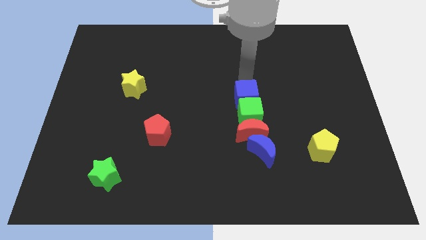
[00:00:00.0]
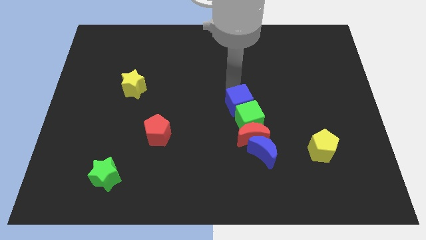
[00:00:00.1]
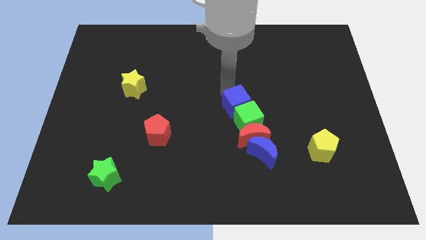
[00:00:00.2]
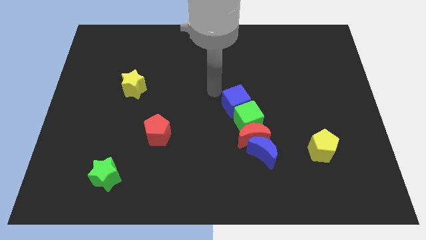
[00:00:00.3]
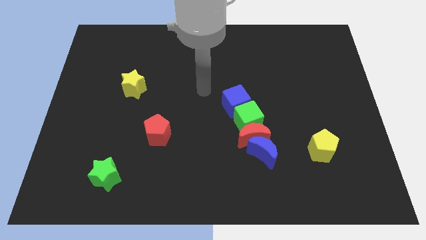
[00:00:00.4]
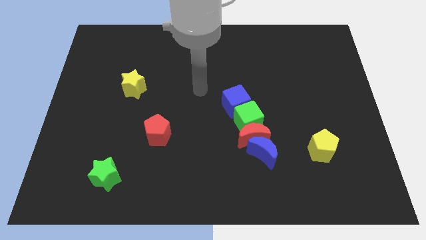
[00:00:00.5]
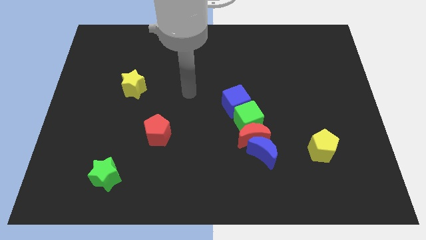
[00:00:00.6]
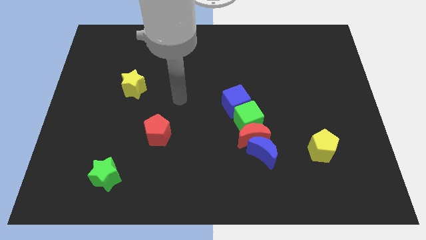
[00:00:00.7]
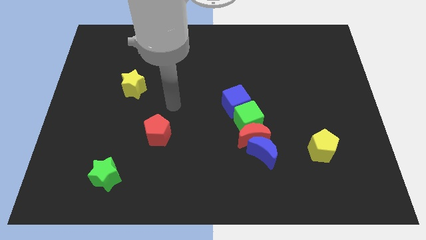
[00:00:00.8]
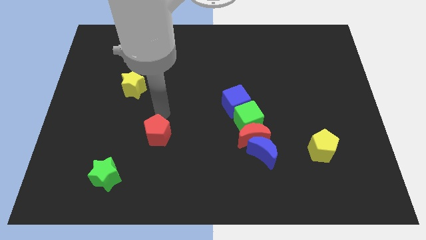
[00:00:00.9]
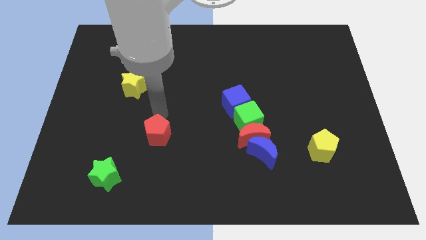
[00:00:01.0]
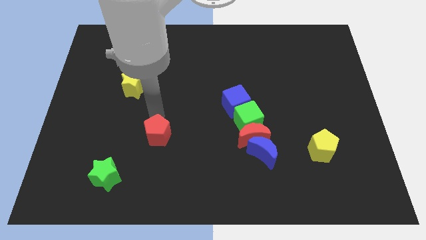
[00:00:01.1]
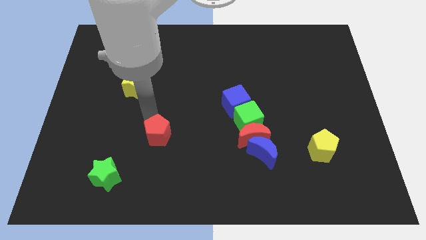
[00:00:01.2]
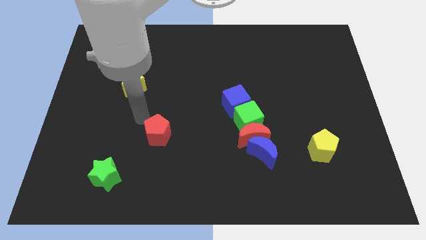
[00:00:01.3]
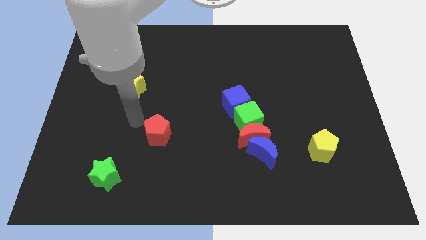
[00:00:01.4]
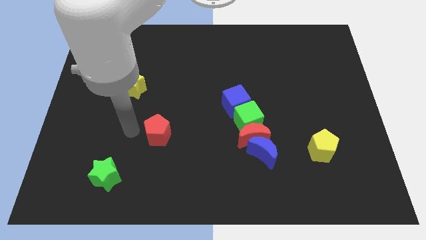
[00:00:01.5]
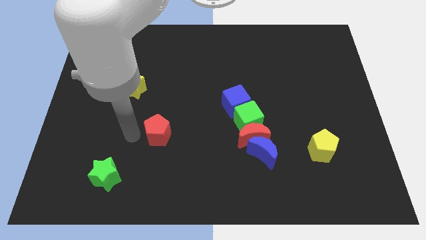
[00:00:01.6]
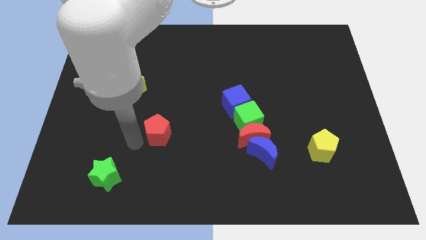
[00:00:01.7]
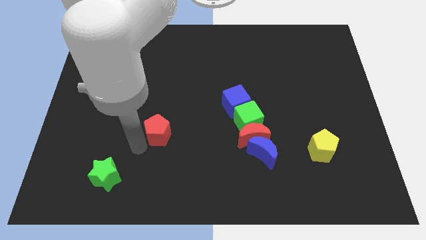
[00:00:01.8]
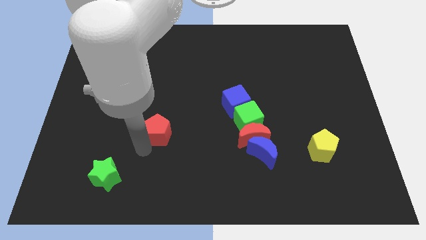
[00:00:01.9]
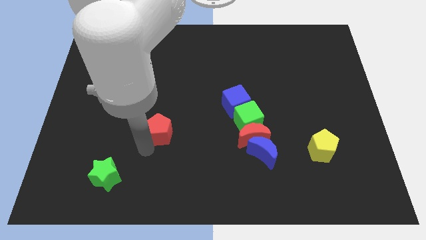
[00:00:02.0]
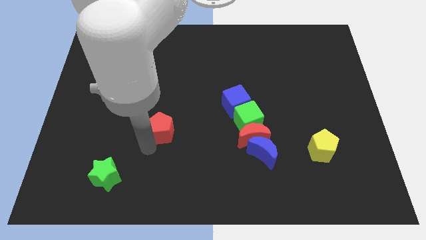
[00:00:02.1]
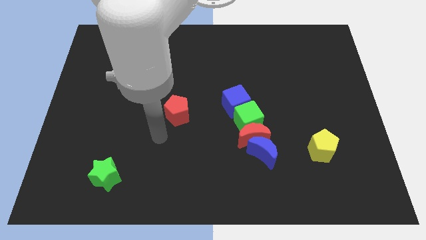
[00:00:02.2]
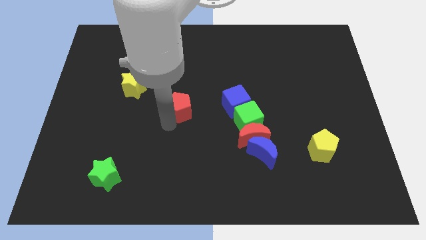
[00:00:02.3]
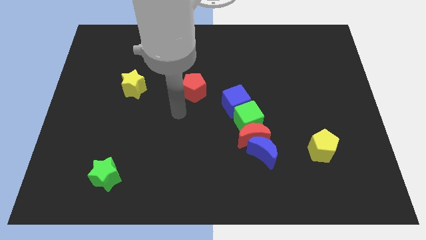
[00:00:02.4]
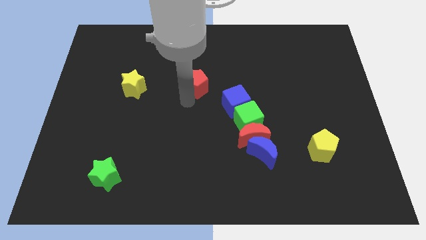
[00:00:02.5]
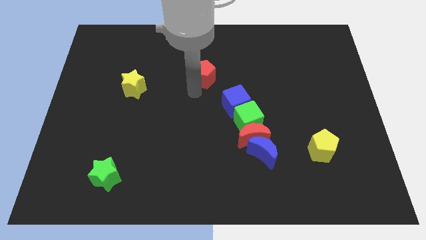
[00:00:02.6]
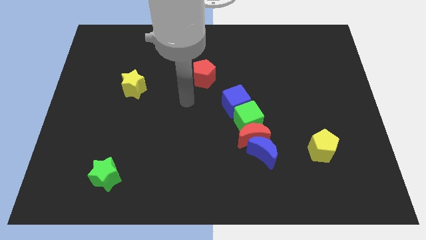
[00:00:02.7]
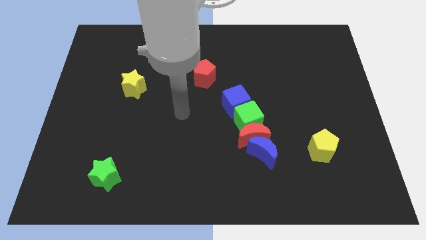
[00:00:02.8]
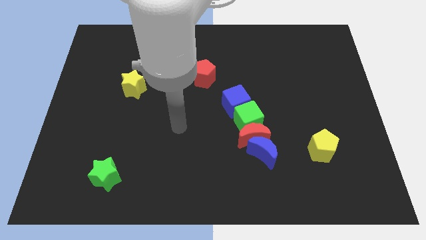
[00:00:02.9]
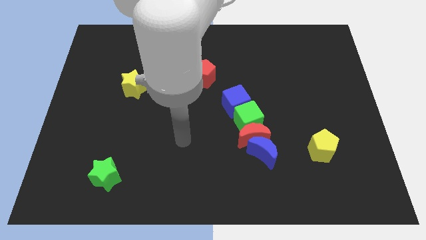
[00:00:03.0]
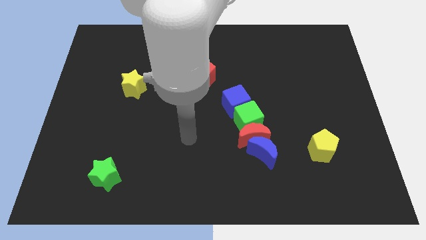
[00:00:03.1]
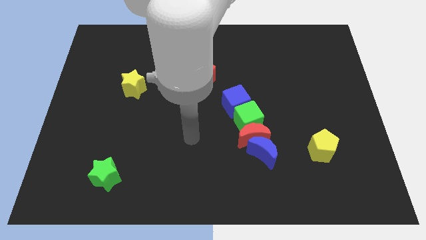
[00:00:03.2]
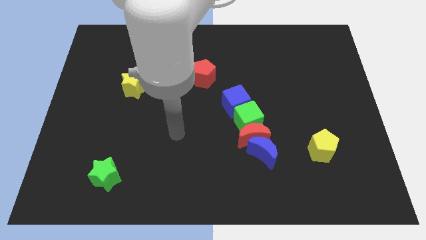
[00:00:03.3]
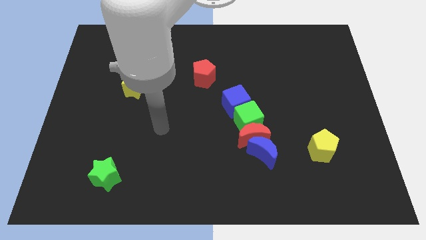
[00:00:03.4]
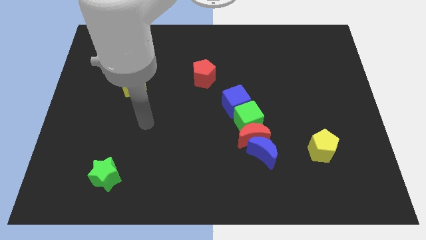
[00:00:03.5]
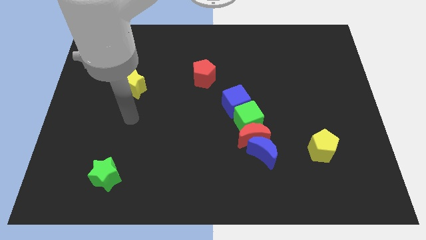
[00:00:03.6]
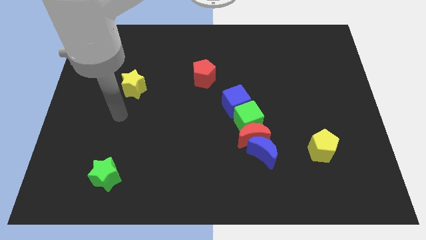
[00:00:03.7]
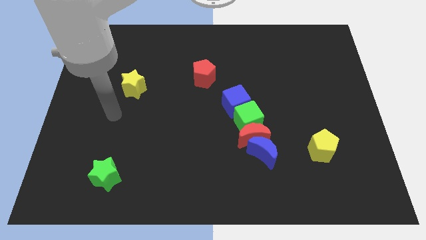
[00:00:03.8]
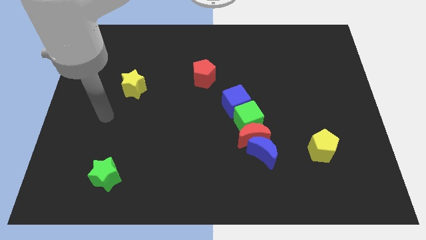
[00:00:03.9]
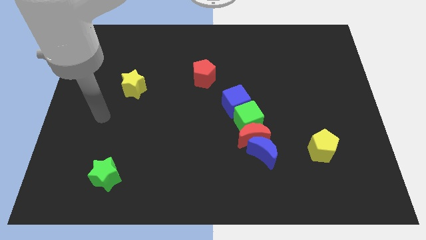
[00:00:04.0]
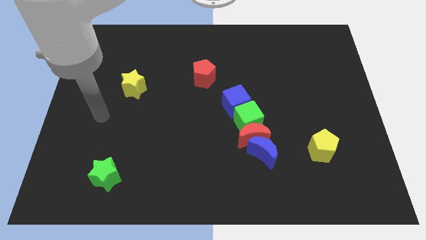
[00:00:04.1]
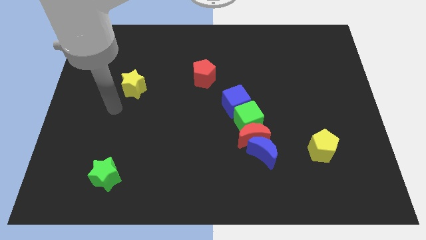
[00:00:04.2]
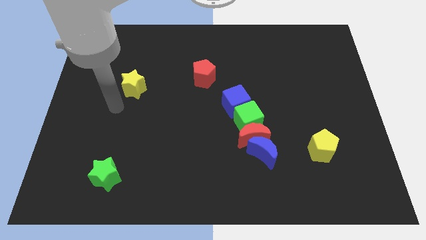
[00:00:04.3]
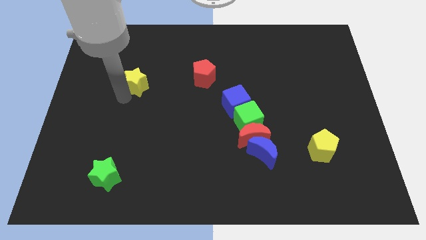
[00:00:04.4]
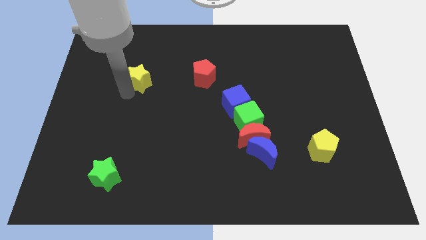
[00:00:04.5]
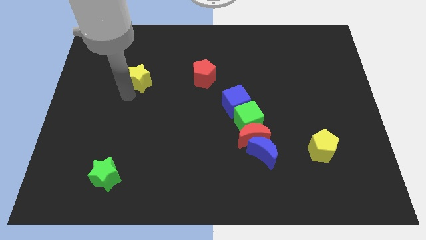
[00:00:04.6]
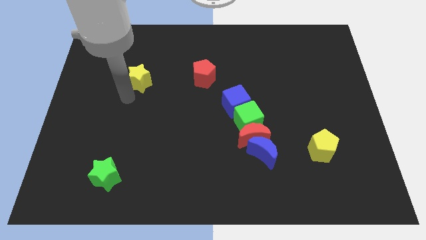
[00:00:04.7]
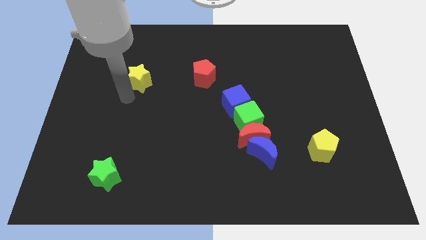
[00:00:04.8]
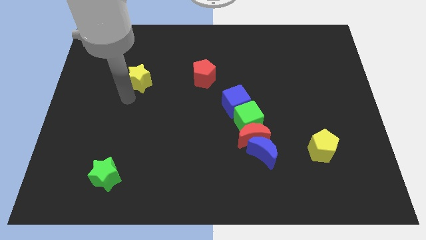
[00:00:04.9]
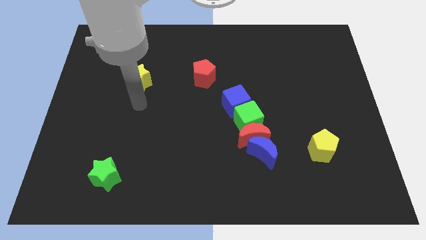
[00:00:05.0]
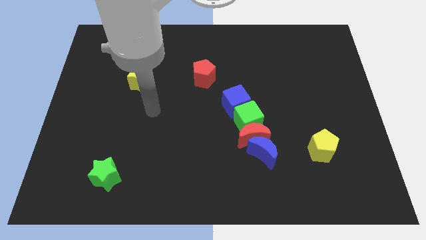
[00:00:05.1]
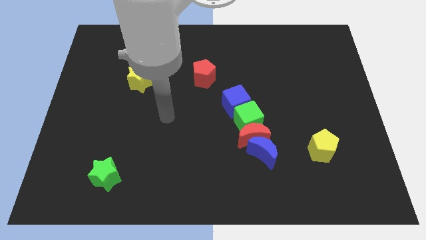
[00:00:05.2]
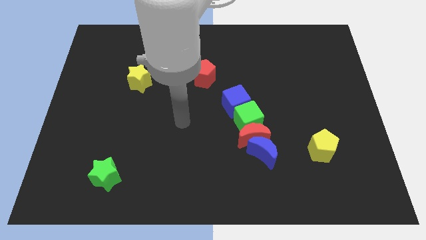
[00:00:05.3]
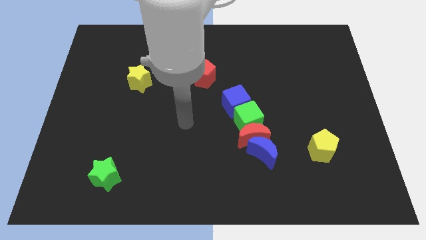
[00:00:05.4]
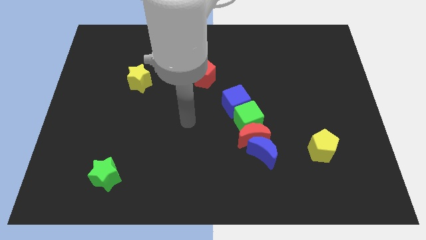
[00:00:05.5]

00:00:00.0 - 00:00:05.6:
place the red pentagon beside the blue cube to form a line

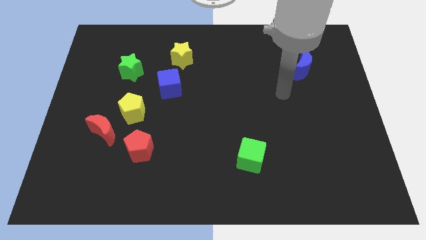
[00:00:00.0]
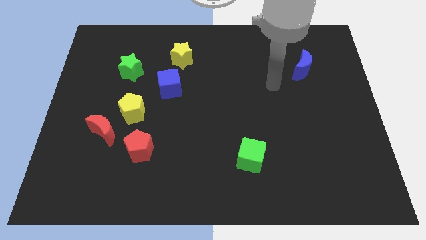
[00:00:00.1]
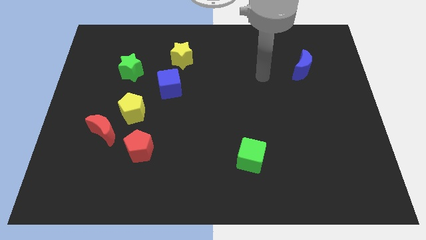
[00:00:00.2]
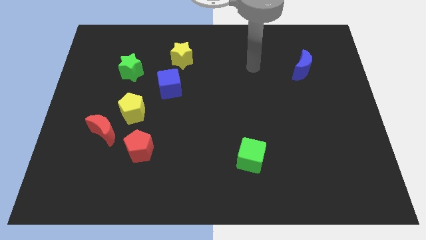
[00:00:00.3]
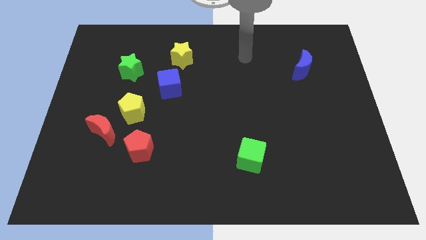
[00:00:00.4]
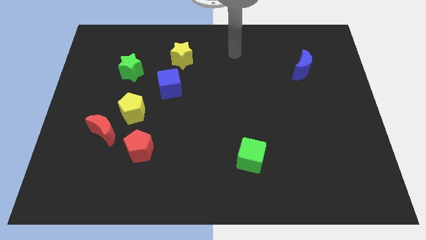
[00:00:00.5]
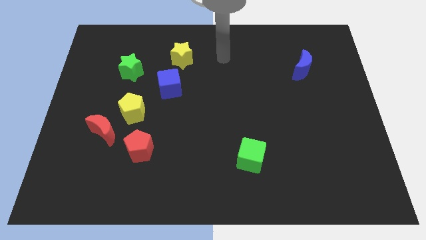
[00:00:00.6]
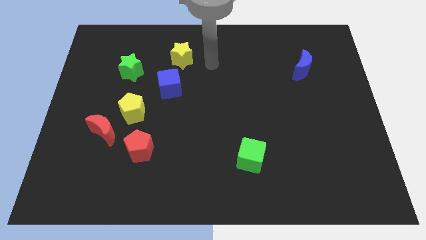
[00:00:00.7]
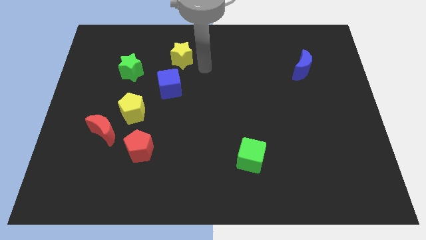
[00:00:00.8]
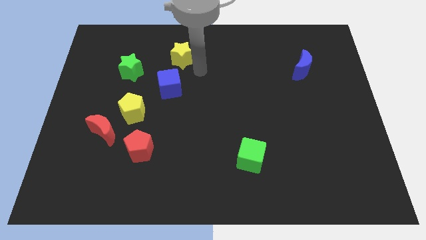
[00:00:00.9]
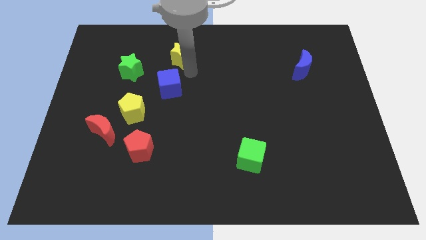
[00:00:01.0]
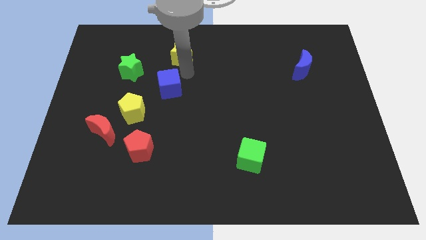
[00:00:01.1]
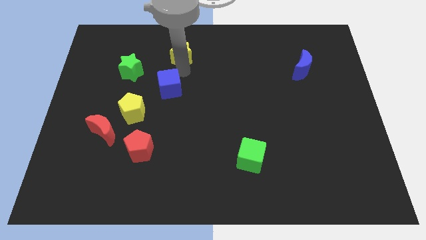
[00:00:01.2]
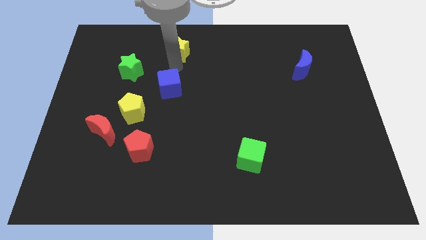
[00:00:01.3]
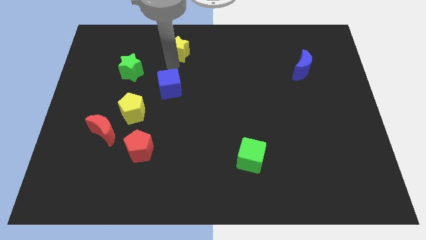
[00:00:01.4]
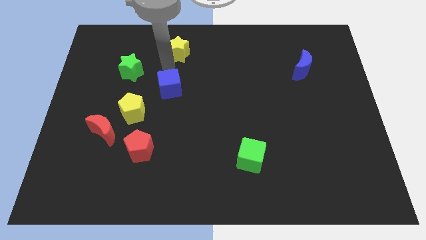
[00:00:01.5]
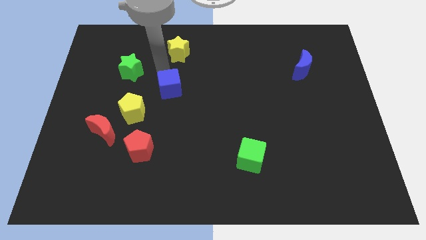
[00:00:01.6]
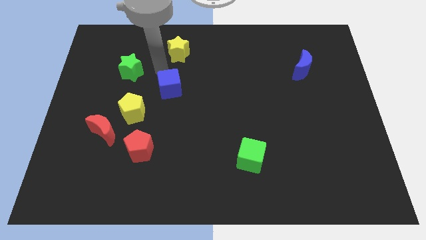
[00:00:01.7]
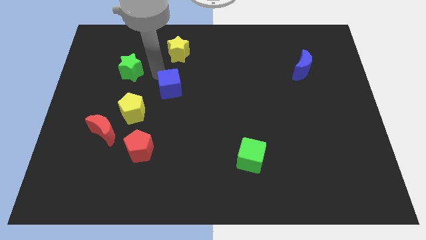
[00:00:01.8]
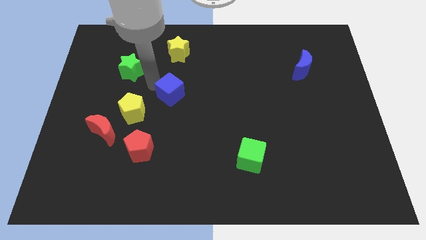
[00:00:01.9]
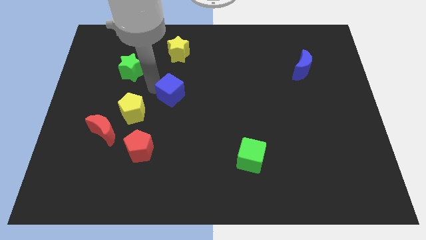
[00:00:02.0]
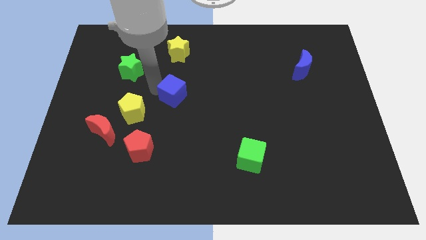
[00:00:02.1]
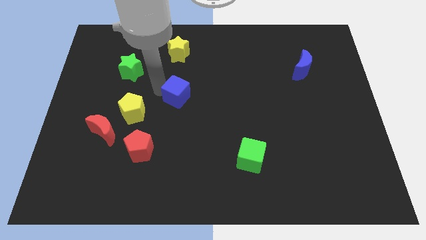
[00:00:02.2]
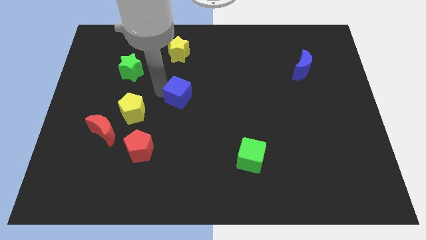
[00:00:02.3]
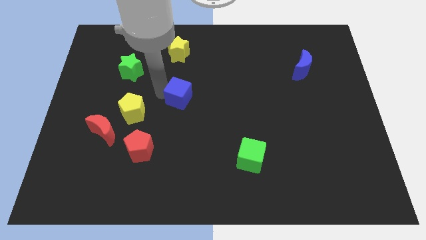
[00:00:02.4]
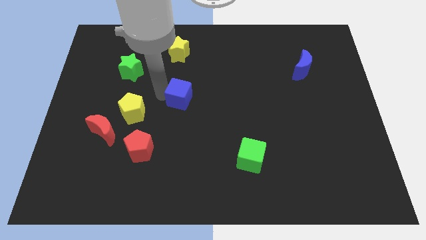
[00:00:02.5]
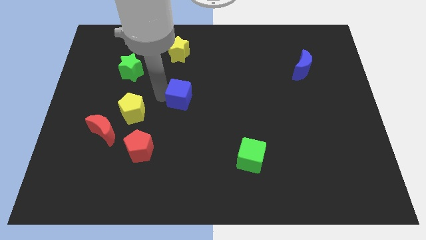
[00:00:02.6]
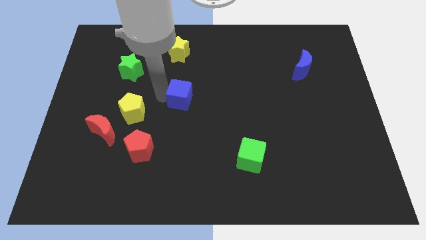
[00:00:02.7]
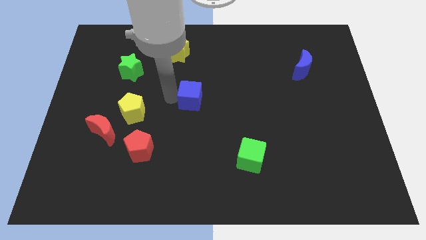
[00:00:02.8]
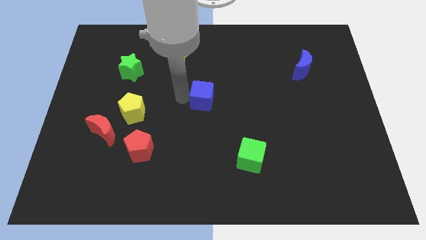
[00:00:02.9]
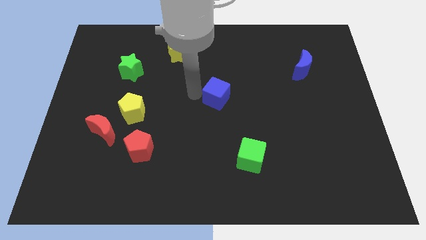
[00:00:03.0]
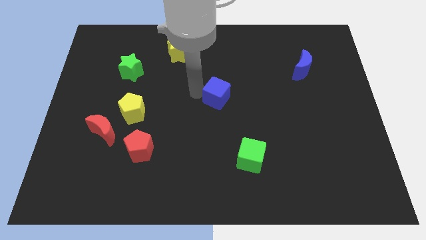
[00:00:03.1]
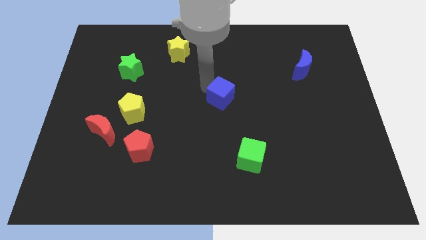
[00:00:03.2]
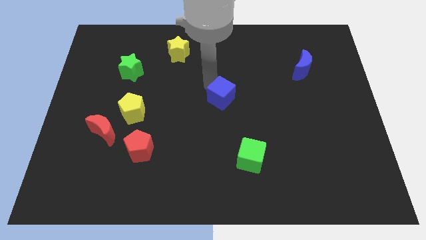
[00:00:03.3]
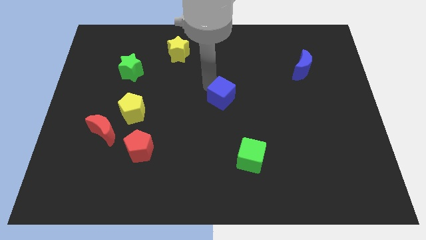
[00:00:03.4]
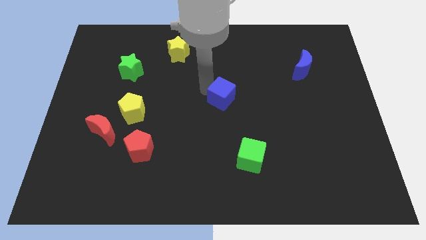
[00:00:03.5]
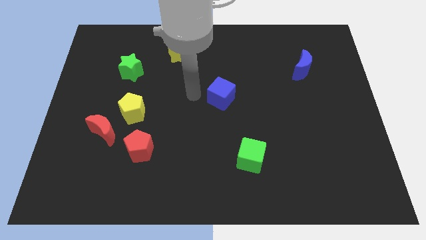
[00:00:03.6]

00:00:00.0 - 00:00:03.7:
place the blue cube to the center of the board
